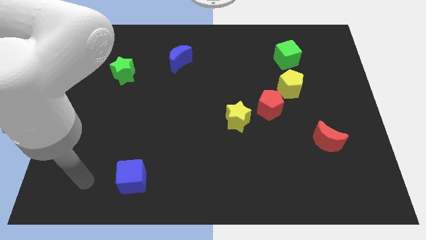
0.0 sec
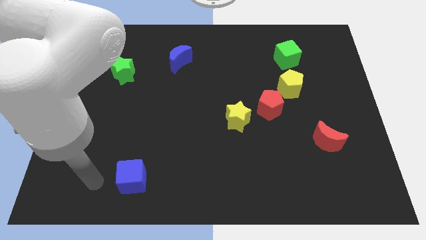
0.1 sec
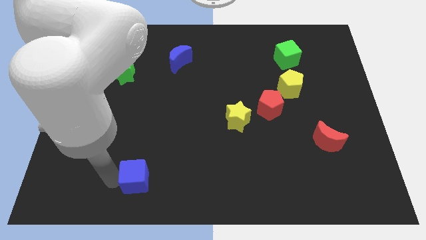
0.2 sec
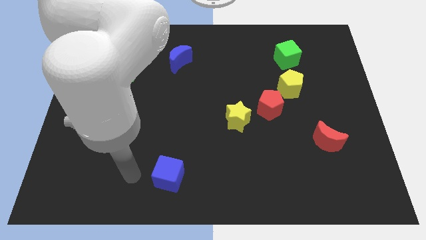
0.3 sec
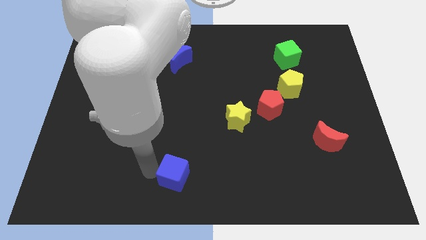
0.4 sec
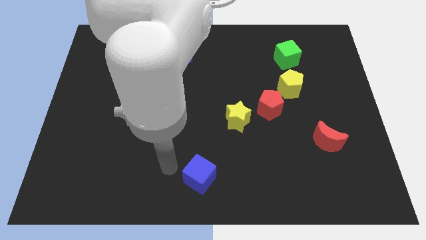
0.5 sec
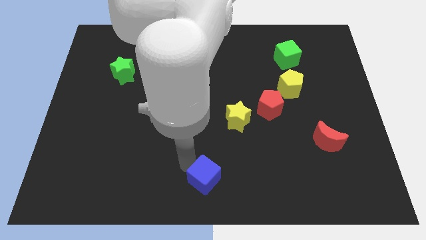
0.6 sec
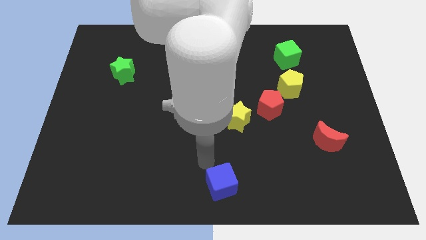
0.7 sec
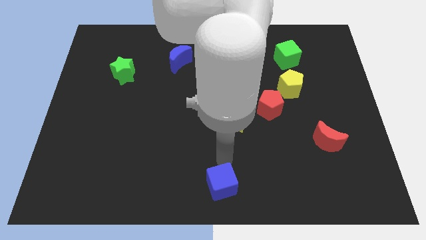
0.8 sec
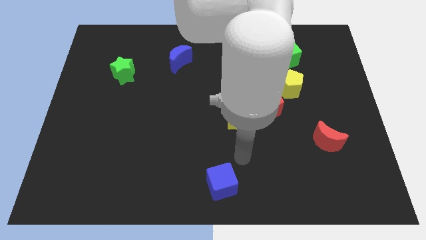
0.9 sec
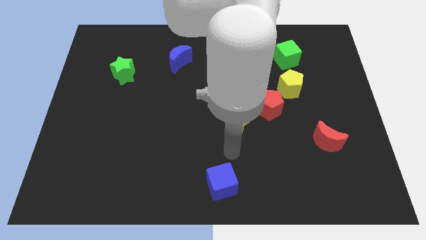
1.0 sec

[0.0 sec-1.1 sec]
push the blue cube towards the bottom center of the board

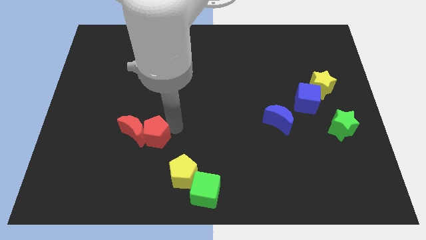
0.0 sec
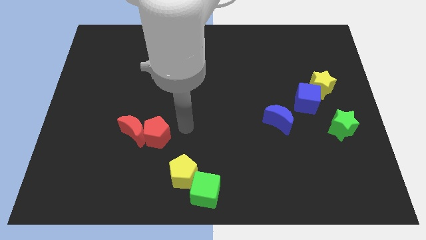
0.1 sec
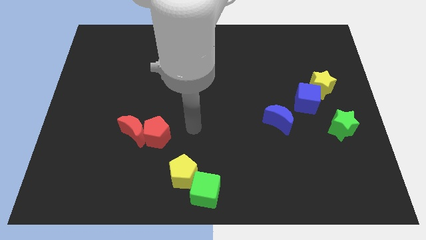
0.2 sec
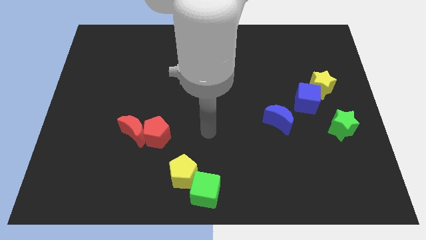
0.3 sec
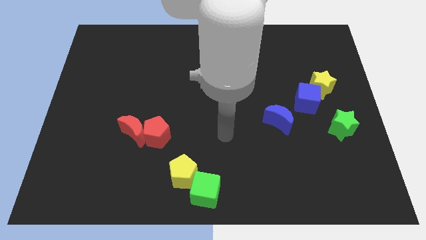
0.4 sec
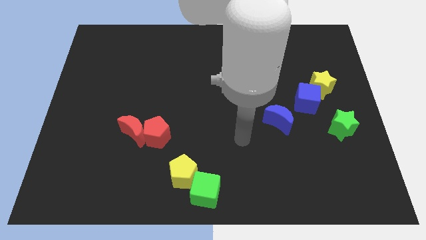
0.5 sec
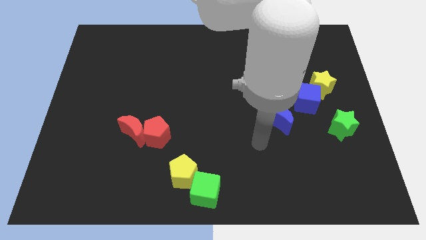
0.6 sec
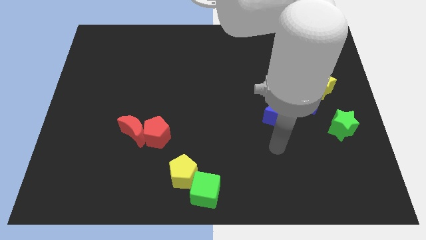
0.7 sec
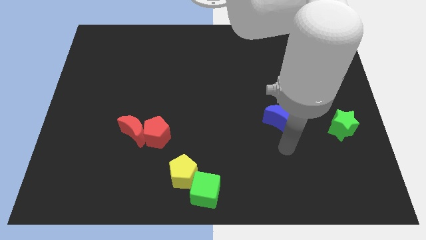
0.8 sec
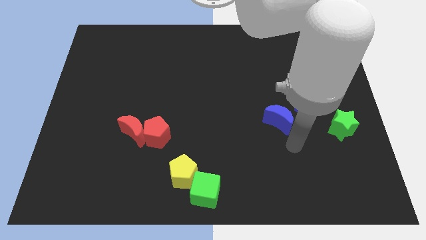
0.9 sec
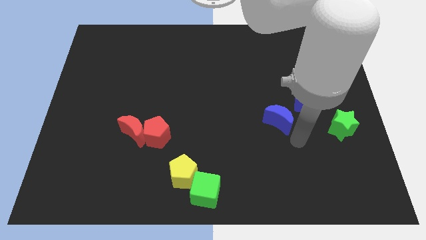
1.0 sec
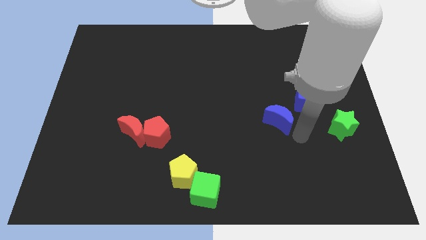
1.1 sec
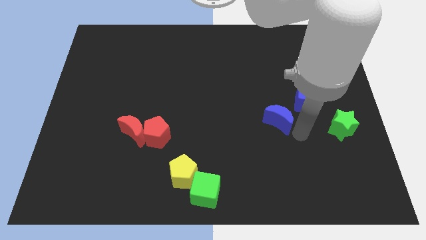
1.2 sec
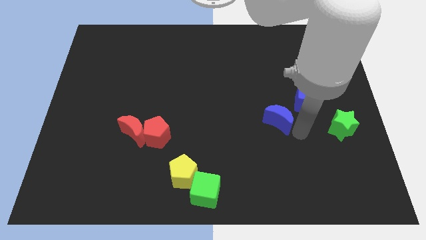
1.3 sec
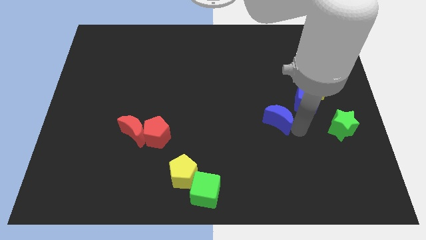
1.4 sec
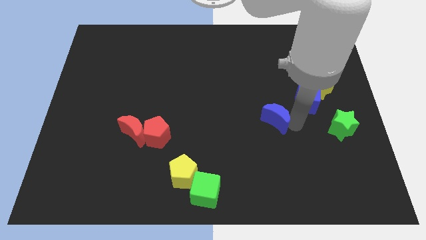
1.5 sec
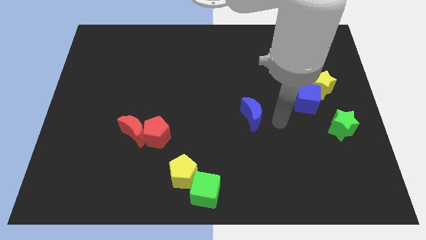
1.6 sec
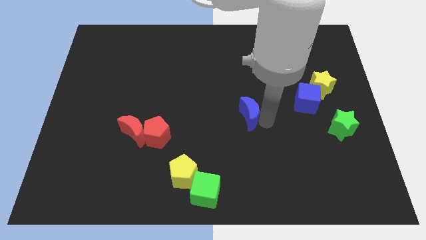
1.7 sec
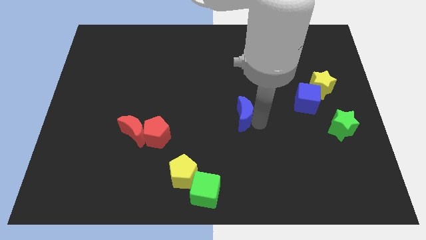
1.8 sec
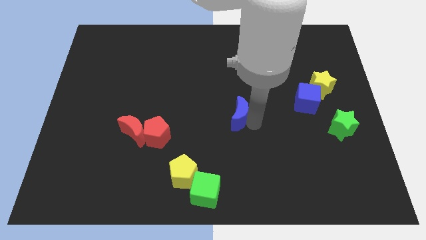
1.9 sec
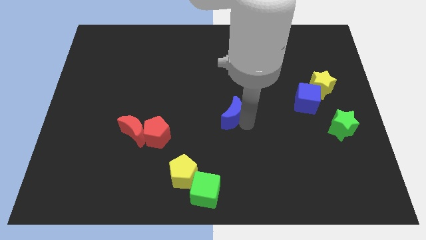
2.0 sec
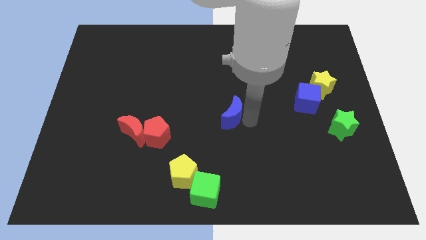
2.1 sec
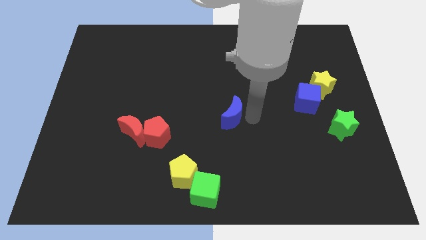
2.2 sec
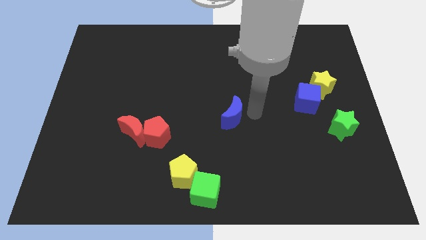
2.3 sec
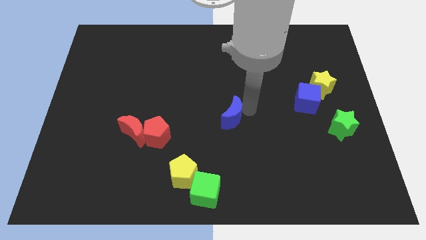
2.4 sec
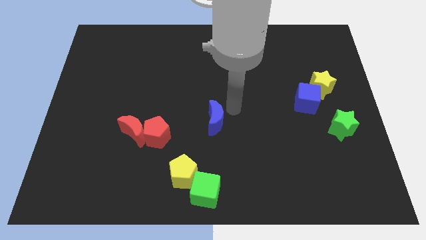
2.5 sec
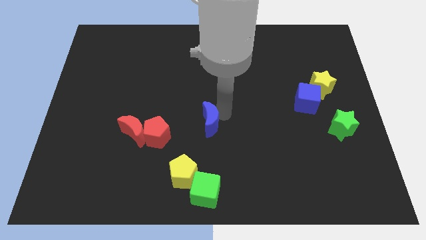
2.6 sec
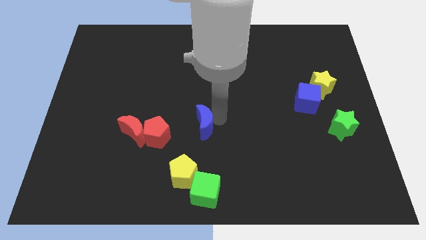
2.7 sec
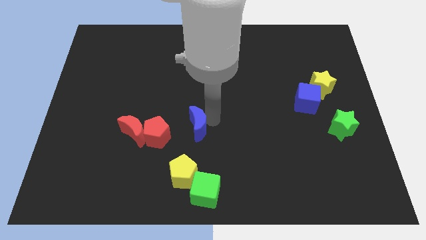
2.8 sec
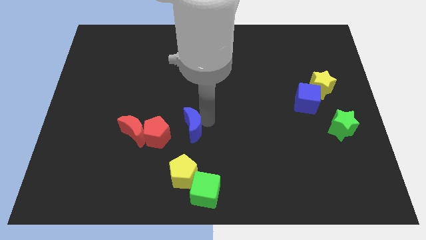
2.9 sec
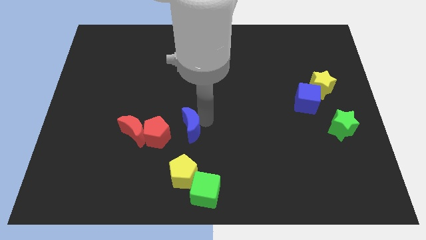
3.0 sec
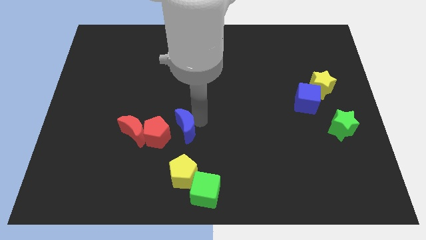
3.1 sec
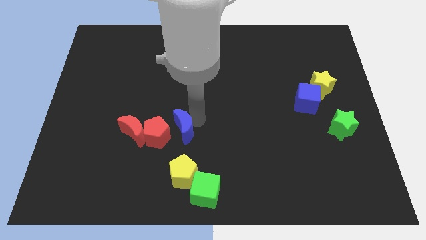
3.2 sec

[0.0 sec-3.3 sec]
push the blue crescent to the top of the yellow pentagon

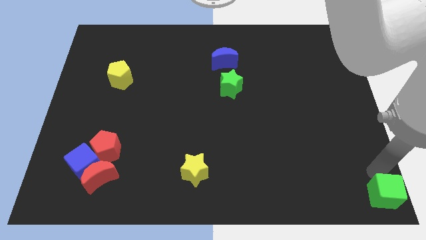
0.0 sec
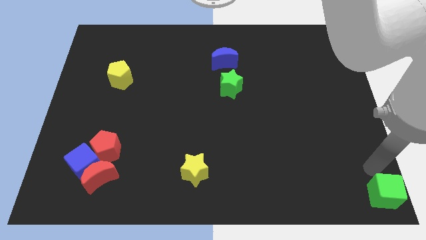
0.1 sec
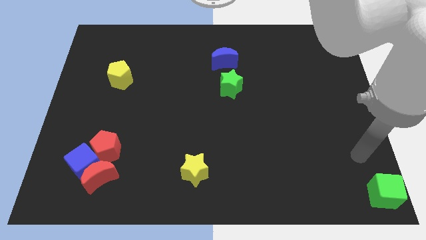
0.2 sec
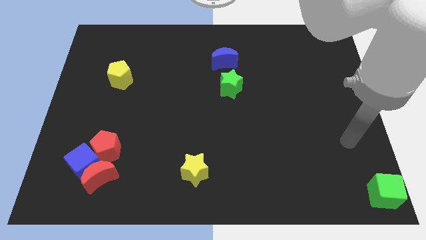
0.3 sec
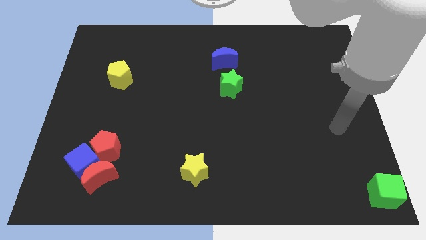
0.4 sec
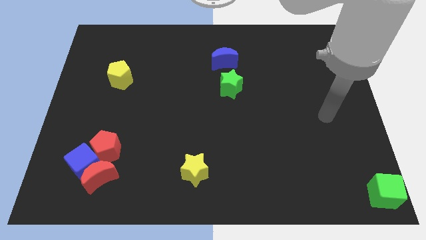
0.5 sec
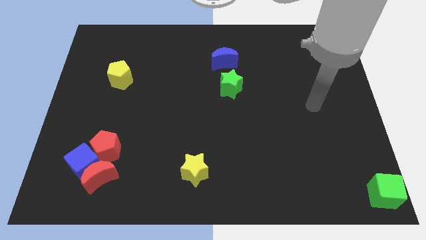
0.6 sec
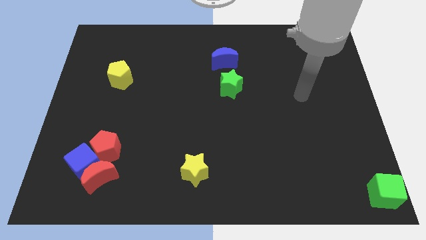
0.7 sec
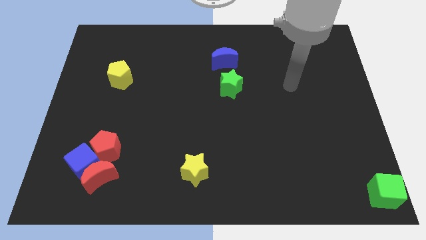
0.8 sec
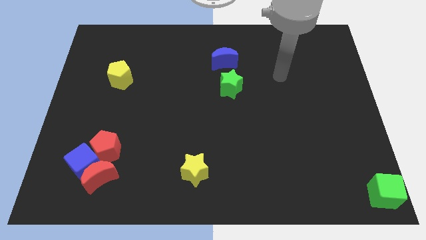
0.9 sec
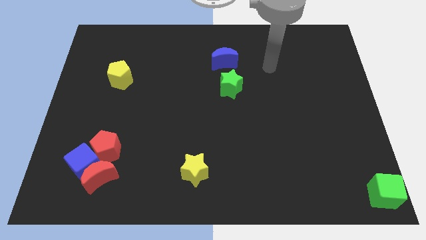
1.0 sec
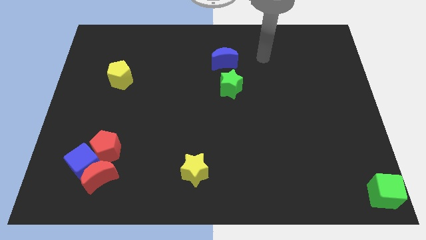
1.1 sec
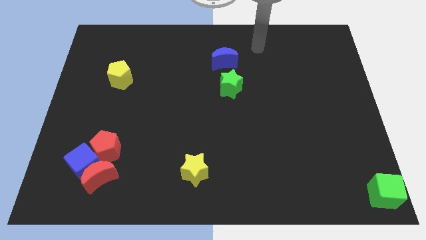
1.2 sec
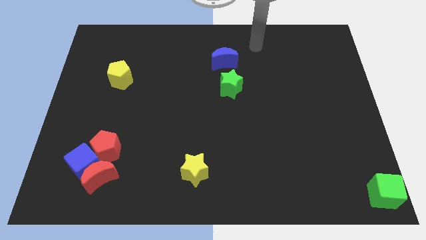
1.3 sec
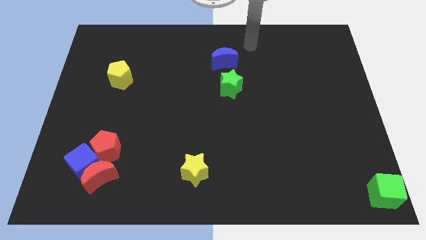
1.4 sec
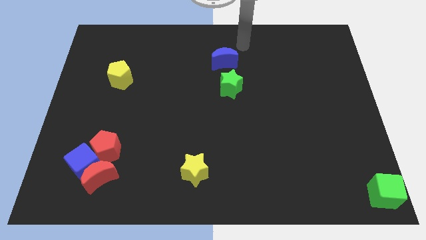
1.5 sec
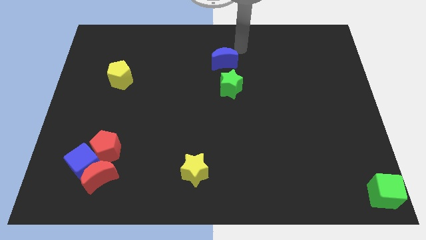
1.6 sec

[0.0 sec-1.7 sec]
place your arm to the top right of the blue moon

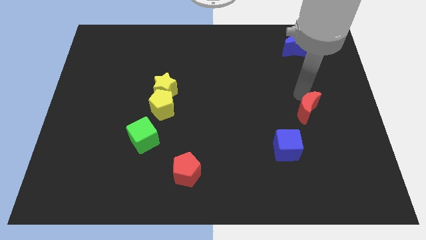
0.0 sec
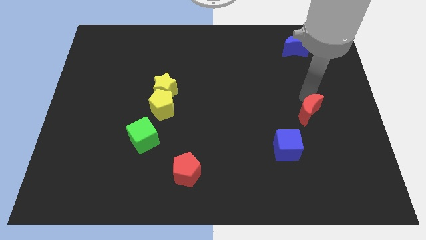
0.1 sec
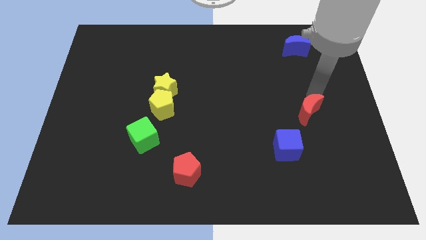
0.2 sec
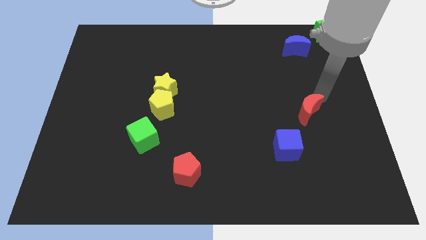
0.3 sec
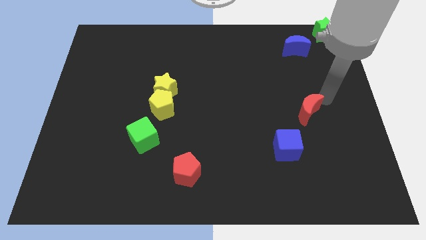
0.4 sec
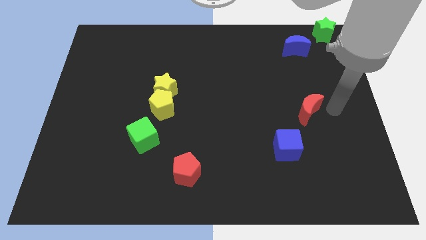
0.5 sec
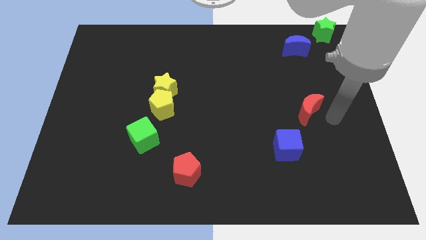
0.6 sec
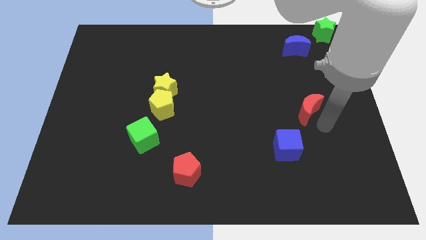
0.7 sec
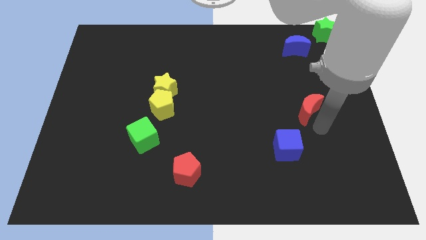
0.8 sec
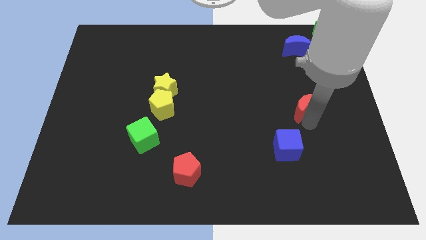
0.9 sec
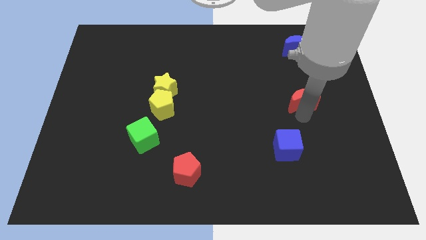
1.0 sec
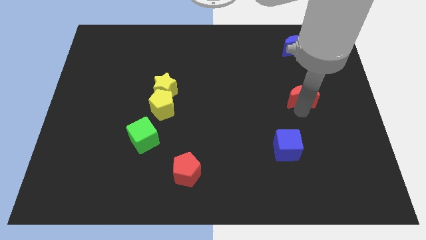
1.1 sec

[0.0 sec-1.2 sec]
push the red moon upwards

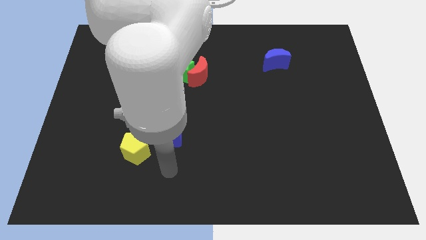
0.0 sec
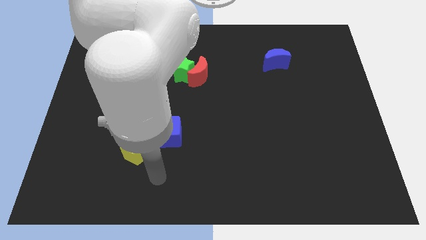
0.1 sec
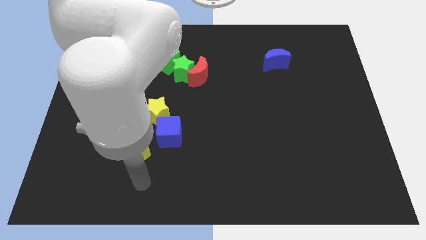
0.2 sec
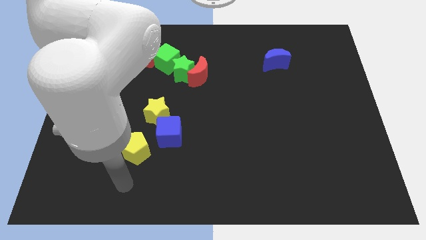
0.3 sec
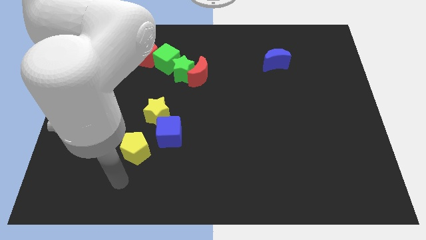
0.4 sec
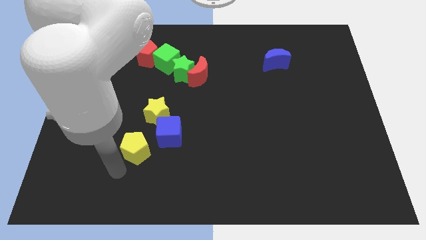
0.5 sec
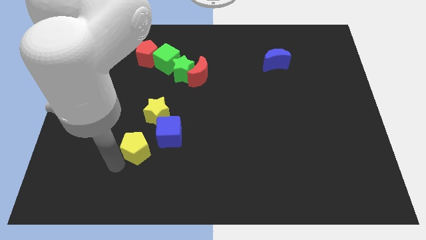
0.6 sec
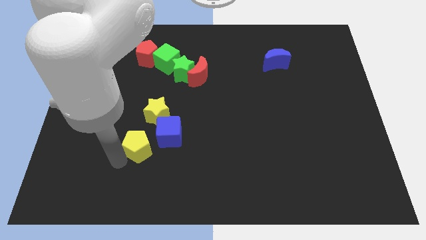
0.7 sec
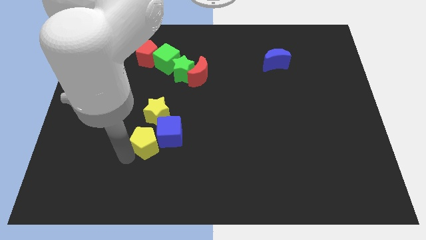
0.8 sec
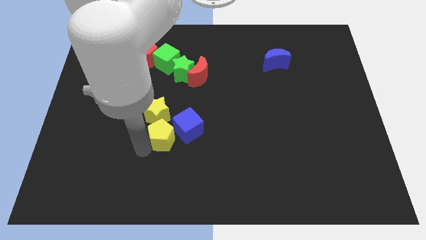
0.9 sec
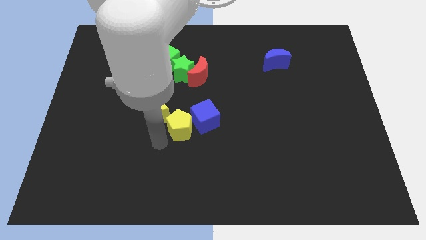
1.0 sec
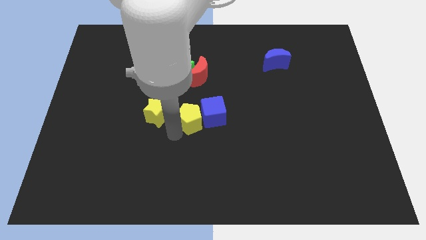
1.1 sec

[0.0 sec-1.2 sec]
push yellow pentagon in blue cube

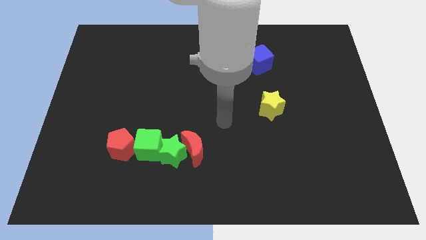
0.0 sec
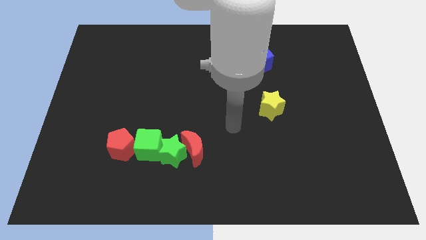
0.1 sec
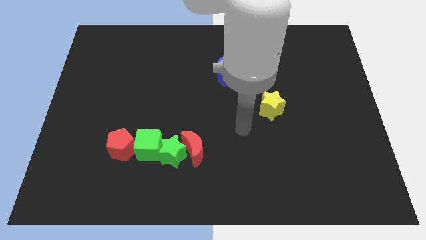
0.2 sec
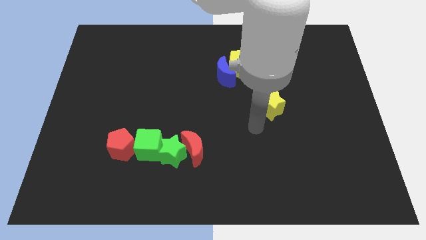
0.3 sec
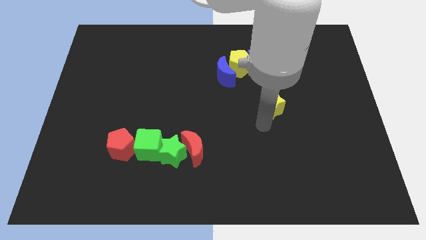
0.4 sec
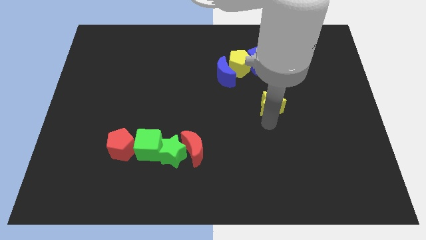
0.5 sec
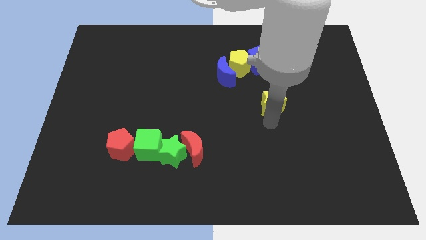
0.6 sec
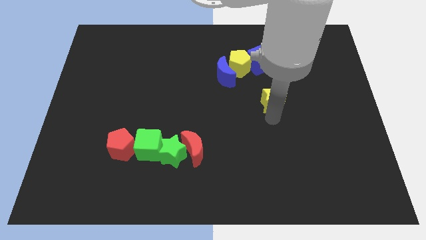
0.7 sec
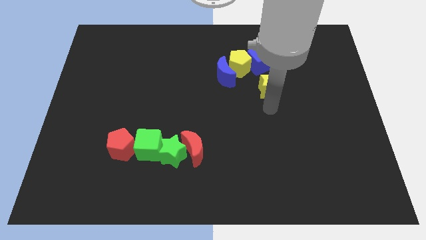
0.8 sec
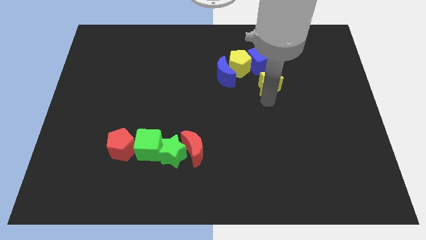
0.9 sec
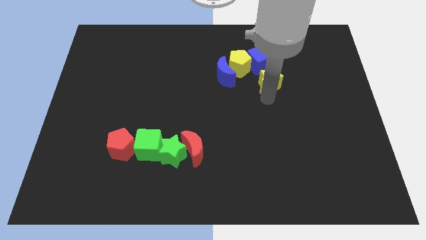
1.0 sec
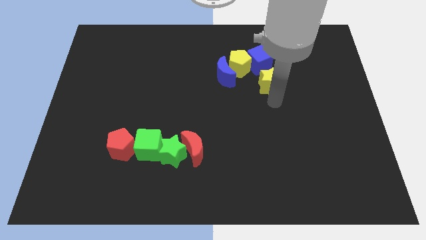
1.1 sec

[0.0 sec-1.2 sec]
slide the yellow star towards the blue cube
